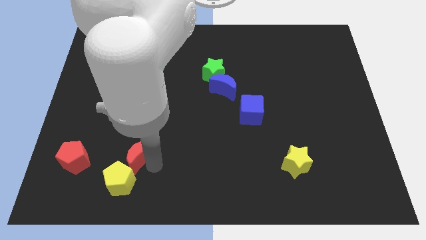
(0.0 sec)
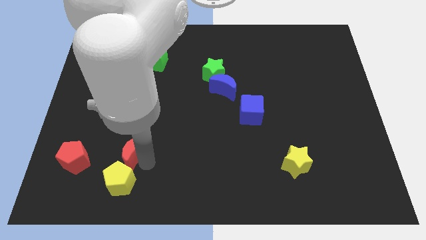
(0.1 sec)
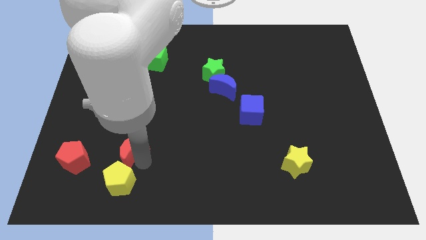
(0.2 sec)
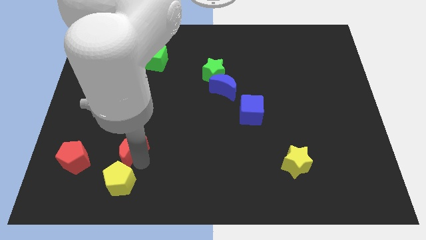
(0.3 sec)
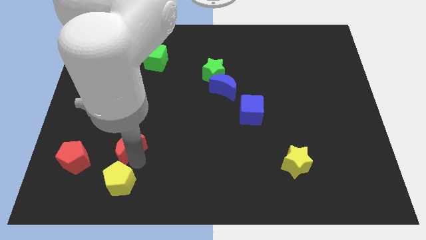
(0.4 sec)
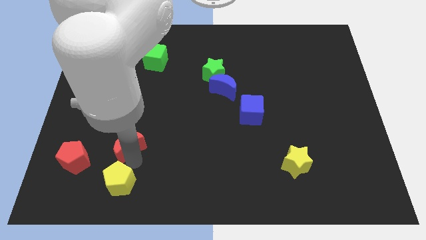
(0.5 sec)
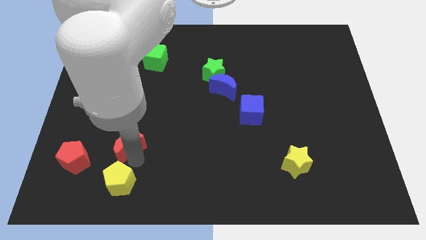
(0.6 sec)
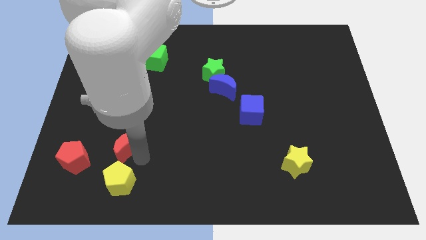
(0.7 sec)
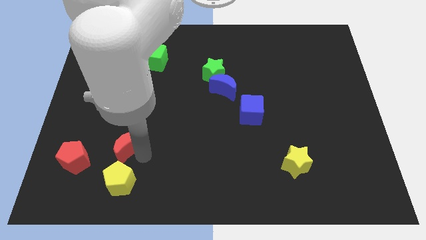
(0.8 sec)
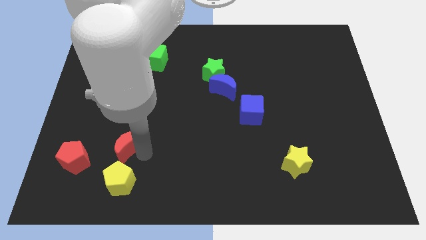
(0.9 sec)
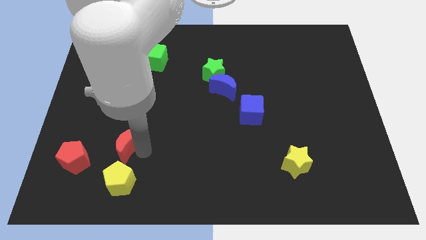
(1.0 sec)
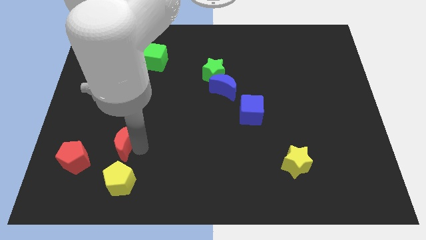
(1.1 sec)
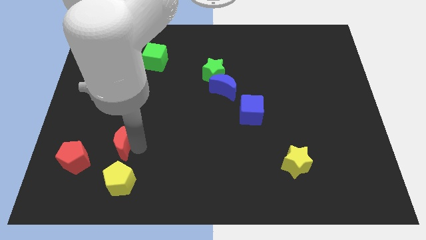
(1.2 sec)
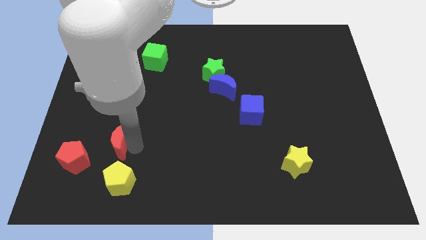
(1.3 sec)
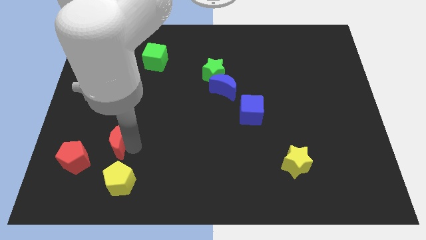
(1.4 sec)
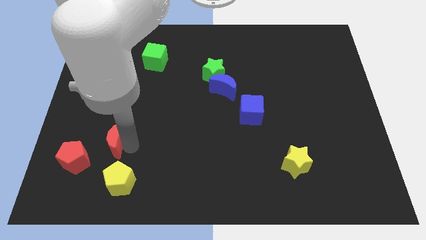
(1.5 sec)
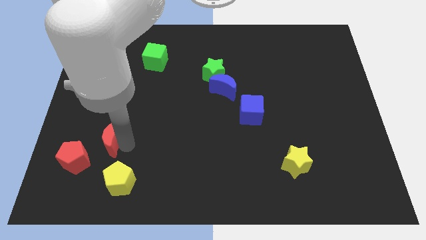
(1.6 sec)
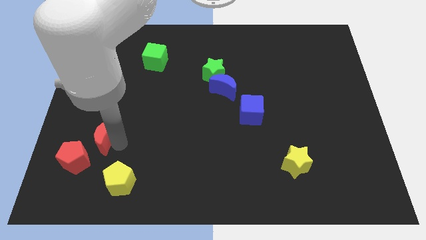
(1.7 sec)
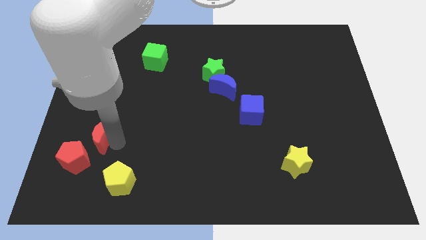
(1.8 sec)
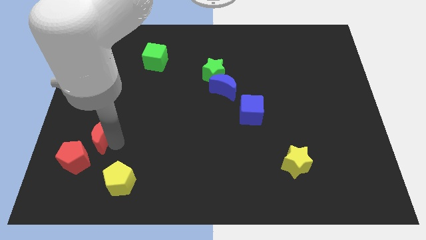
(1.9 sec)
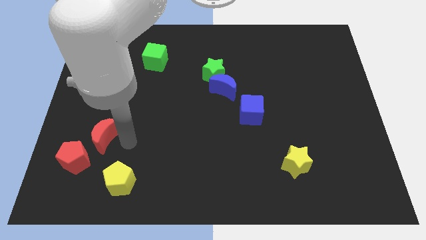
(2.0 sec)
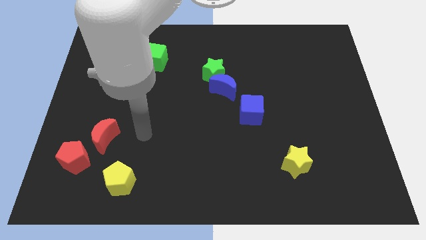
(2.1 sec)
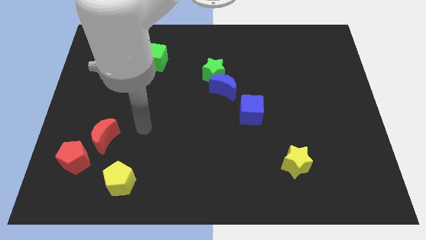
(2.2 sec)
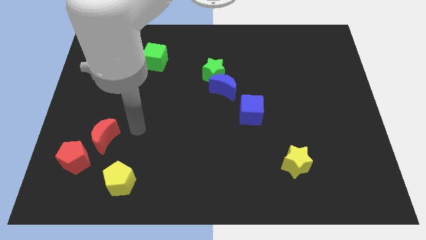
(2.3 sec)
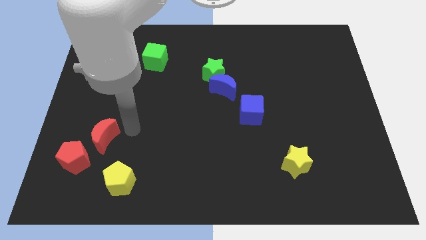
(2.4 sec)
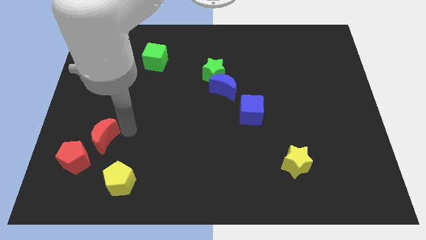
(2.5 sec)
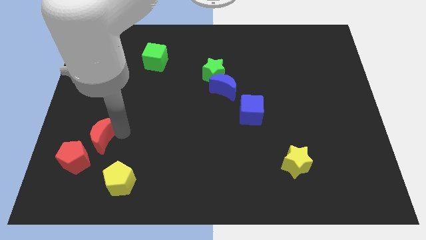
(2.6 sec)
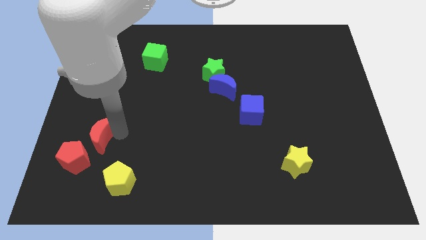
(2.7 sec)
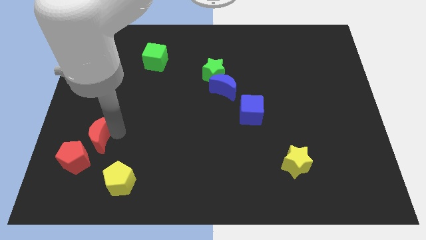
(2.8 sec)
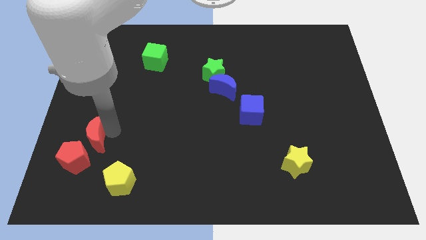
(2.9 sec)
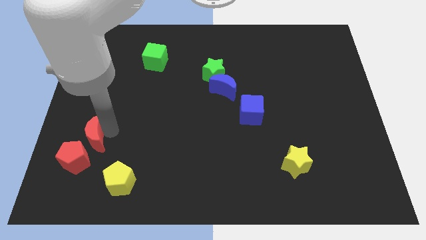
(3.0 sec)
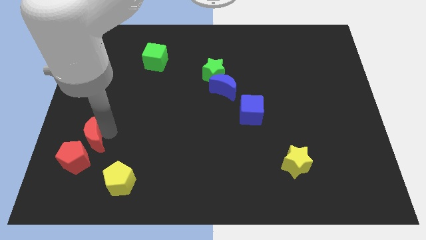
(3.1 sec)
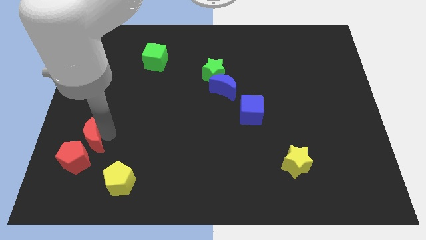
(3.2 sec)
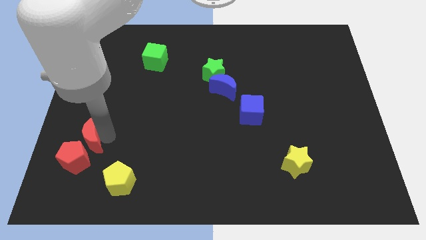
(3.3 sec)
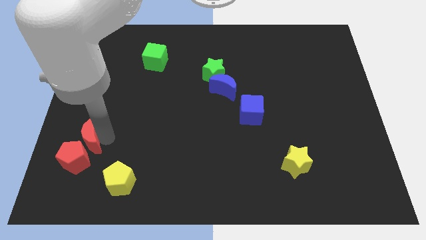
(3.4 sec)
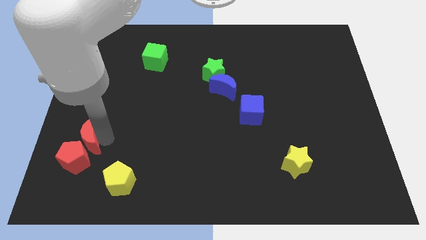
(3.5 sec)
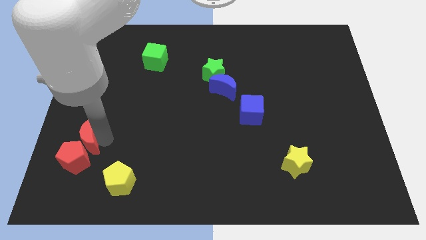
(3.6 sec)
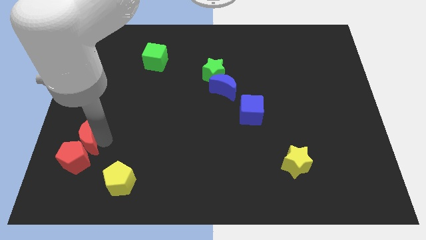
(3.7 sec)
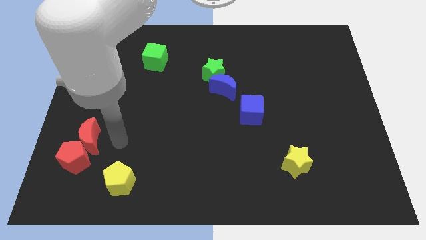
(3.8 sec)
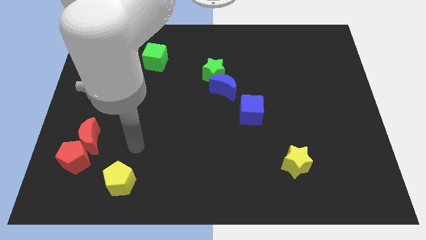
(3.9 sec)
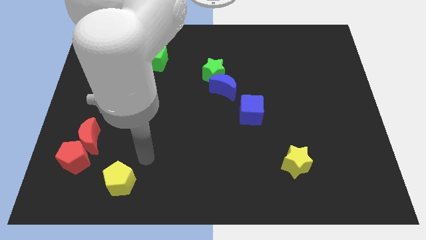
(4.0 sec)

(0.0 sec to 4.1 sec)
move red moon into red pentagon

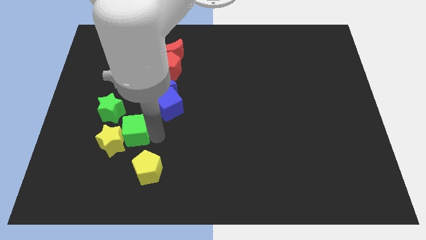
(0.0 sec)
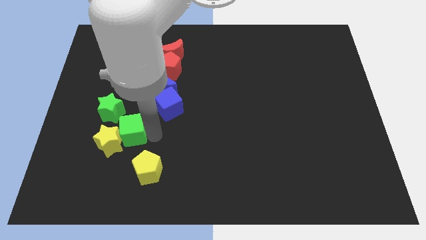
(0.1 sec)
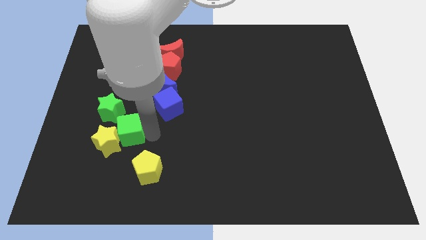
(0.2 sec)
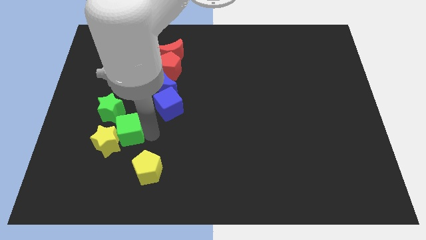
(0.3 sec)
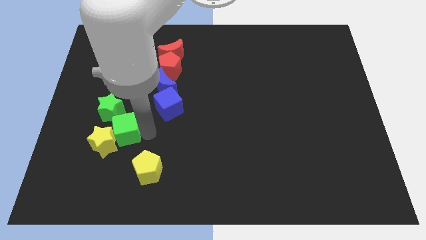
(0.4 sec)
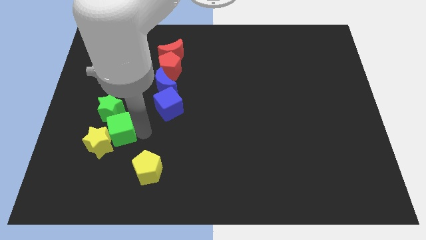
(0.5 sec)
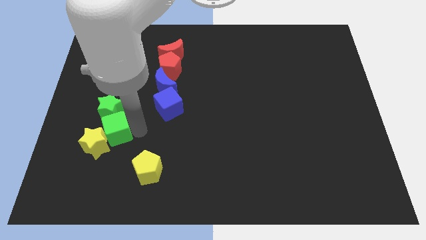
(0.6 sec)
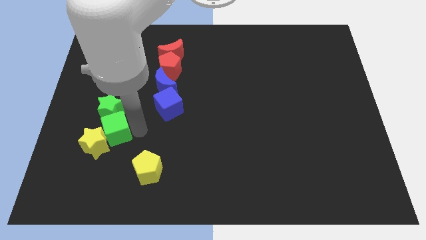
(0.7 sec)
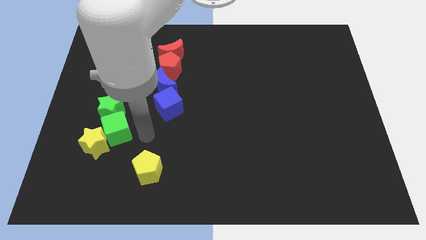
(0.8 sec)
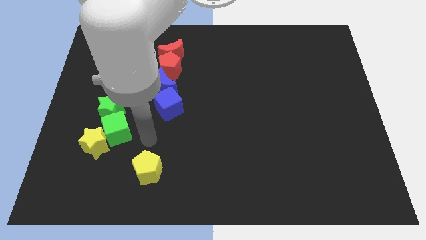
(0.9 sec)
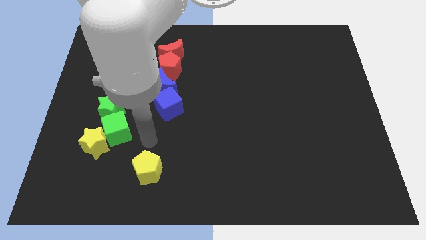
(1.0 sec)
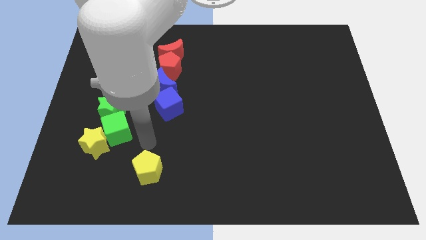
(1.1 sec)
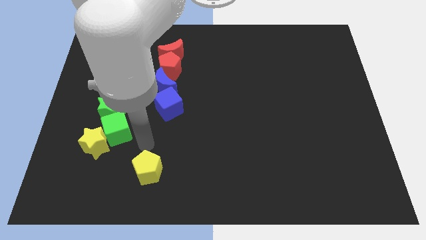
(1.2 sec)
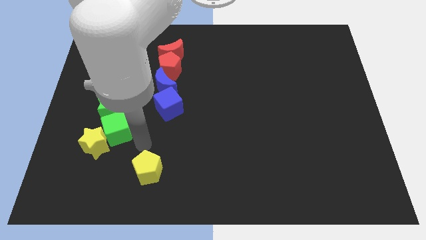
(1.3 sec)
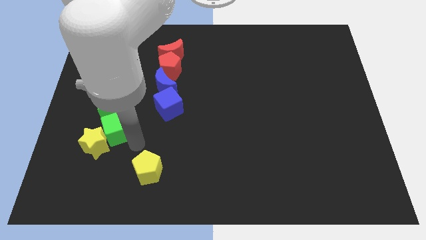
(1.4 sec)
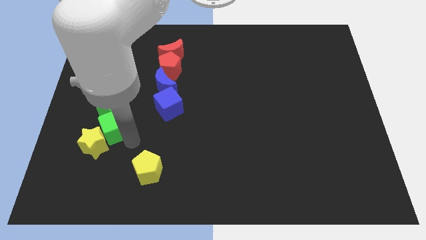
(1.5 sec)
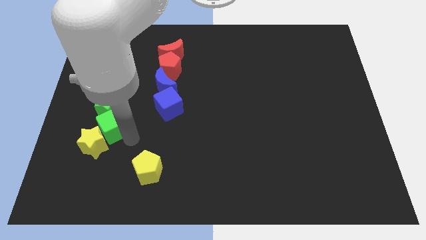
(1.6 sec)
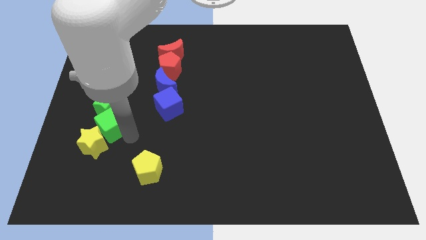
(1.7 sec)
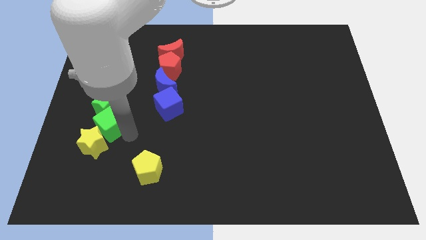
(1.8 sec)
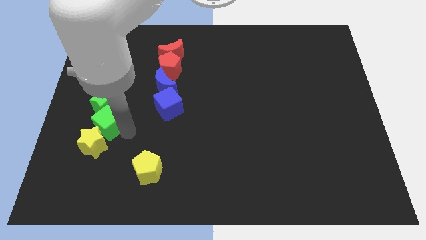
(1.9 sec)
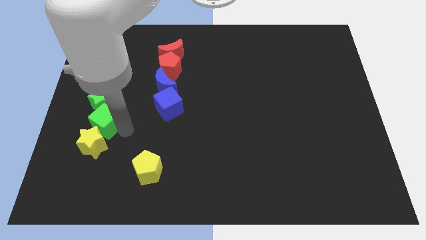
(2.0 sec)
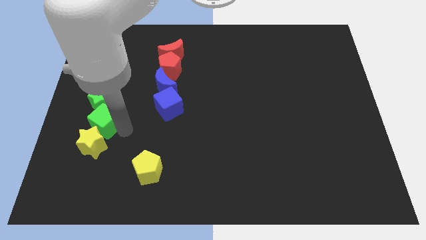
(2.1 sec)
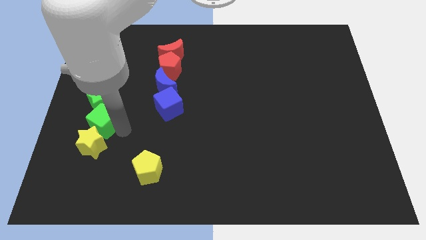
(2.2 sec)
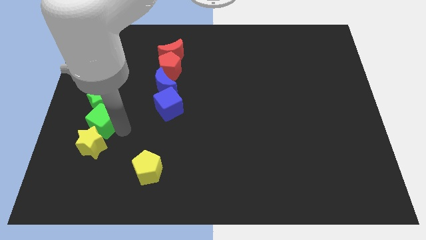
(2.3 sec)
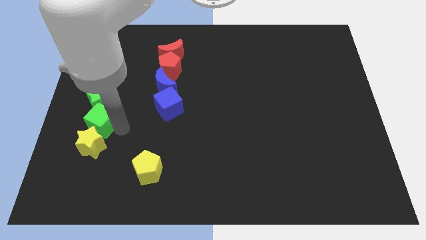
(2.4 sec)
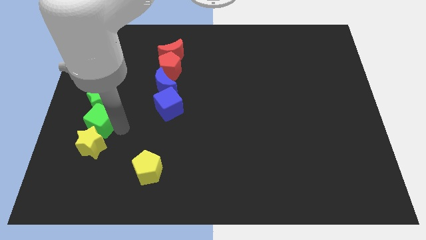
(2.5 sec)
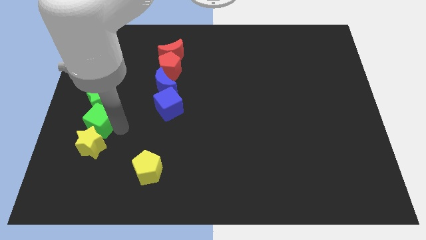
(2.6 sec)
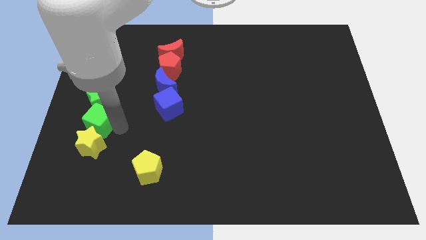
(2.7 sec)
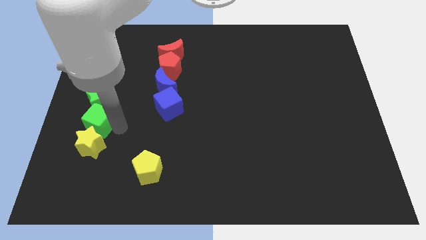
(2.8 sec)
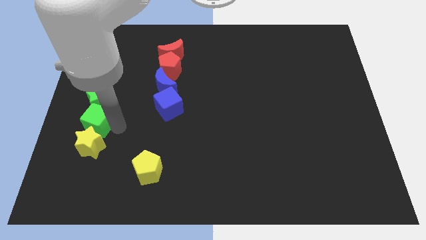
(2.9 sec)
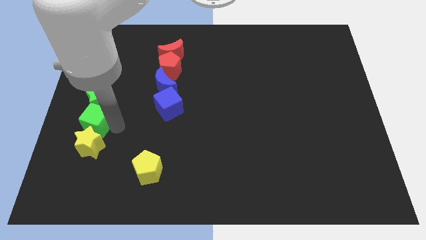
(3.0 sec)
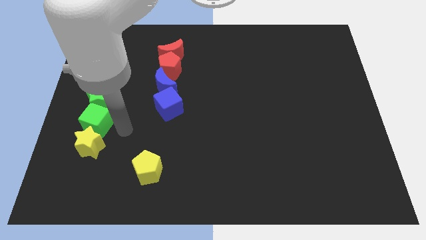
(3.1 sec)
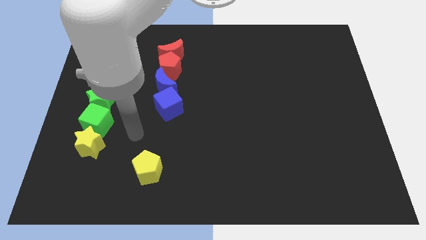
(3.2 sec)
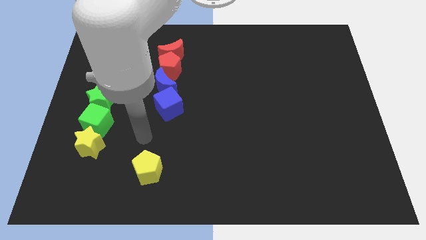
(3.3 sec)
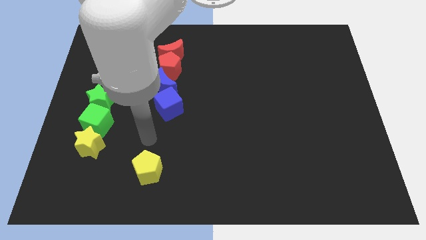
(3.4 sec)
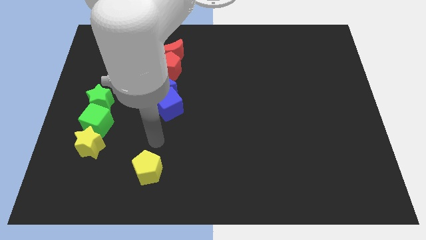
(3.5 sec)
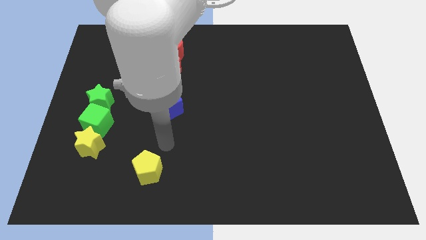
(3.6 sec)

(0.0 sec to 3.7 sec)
adjust both the green blocks and yellow to form a vertical line of blocks

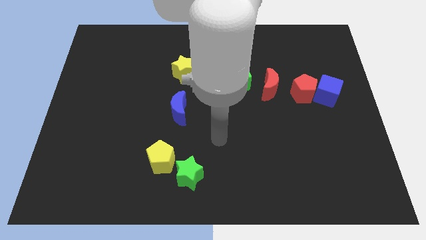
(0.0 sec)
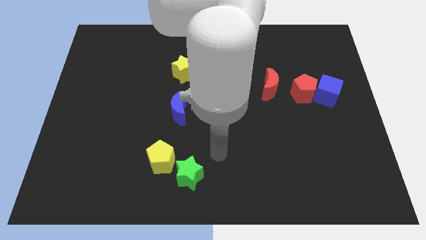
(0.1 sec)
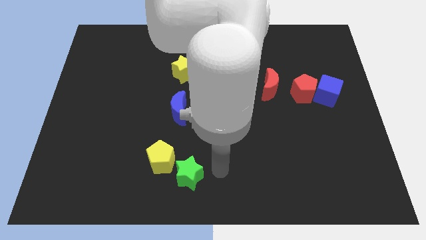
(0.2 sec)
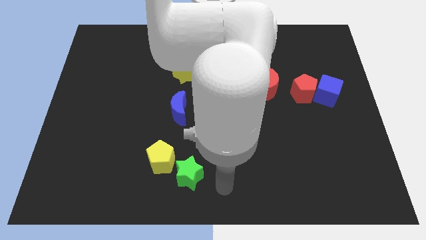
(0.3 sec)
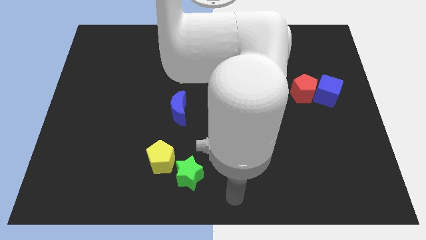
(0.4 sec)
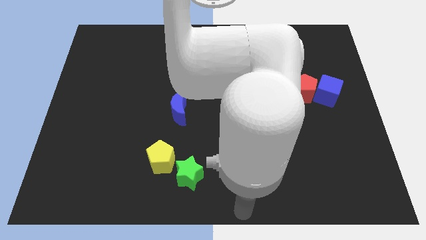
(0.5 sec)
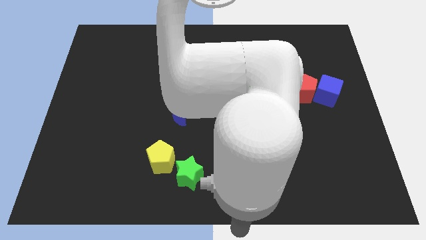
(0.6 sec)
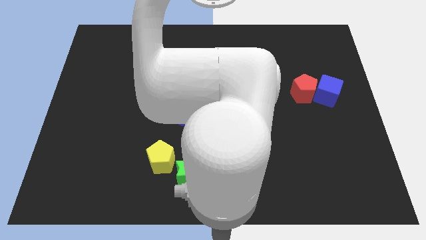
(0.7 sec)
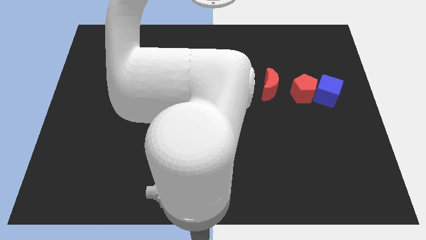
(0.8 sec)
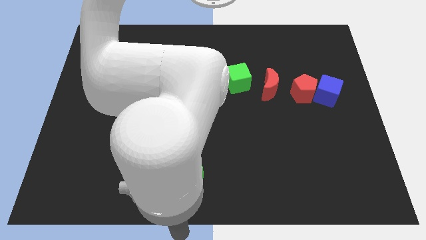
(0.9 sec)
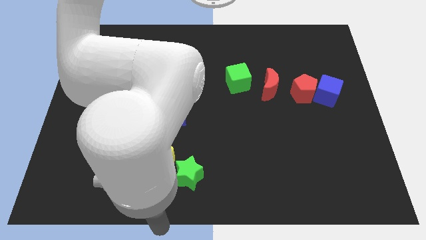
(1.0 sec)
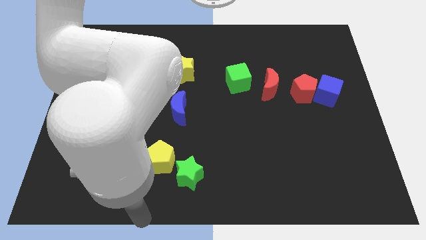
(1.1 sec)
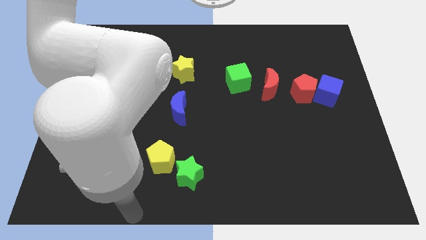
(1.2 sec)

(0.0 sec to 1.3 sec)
move your arm towards the bottom left side
